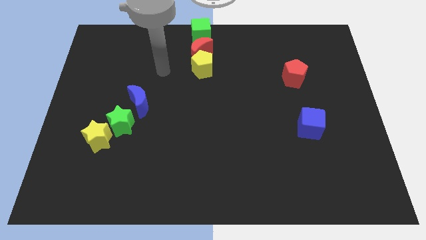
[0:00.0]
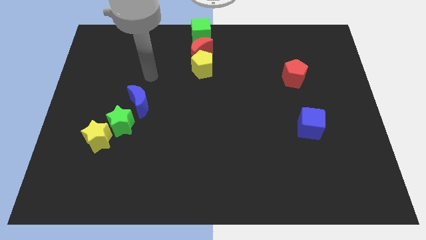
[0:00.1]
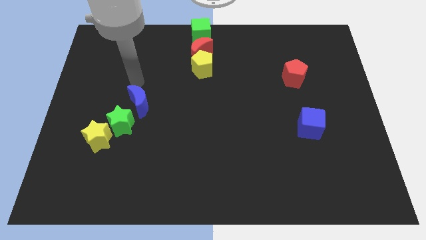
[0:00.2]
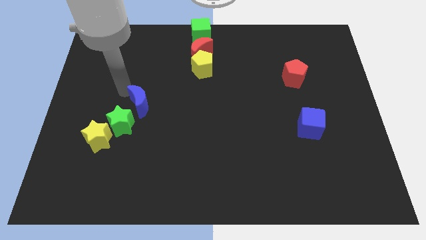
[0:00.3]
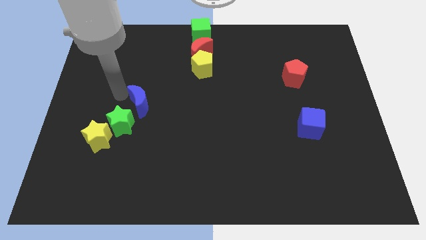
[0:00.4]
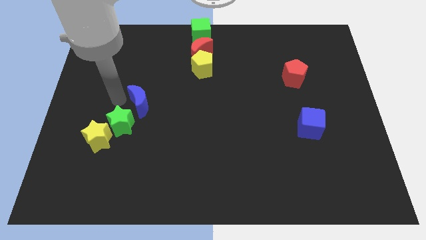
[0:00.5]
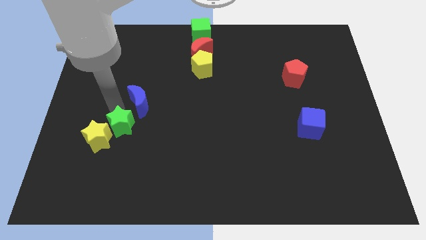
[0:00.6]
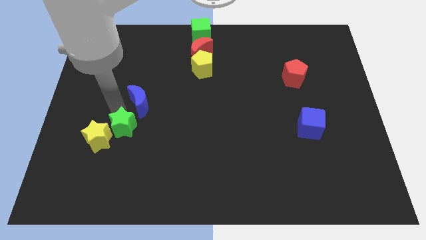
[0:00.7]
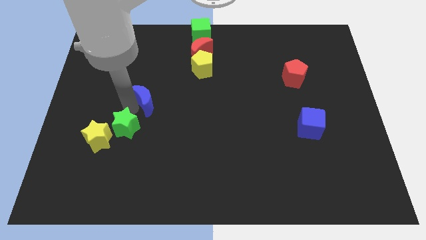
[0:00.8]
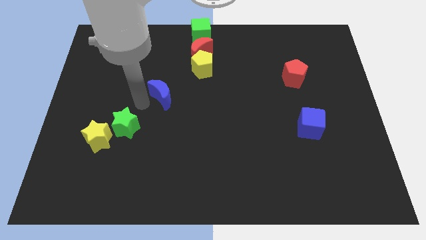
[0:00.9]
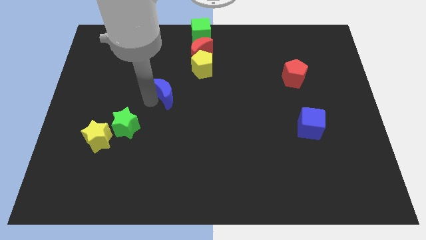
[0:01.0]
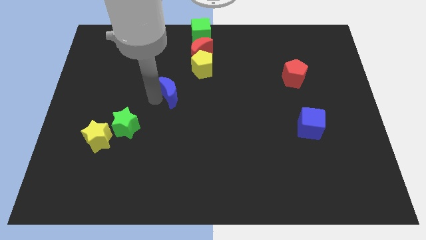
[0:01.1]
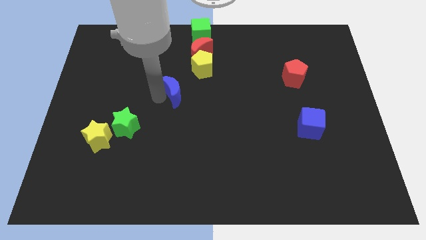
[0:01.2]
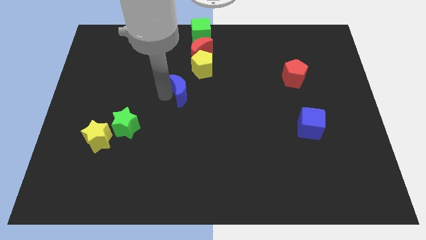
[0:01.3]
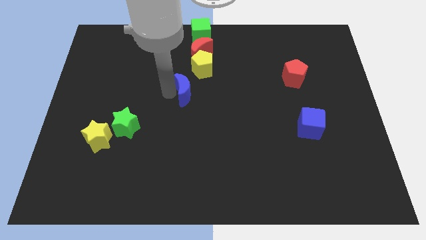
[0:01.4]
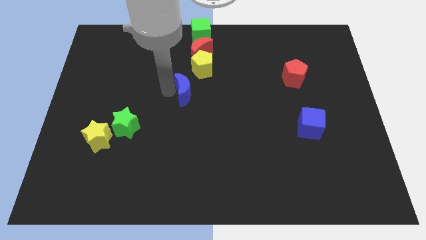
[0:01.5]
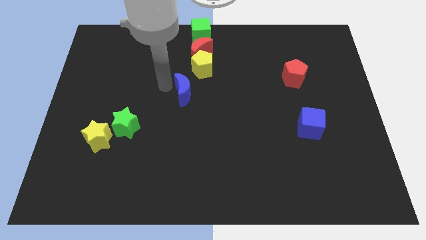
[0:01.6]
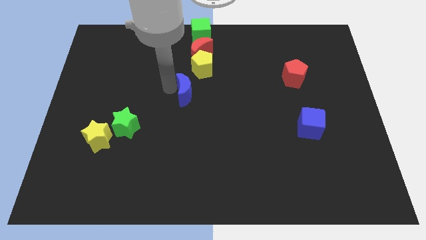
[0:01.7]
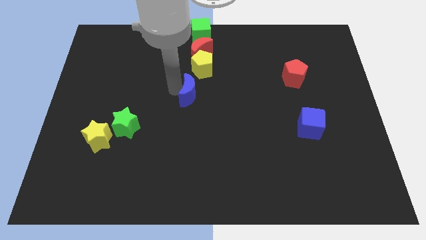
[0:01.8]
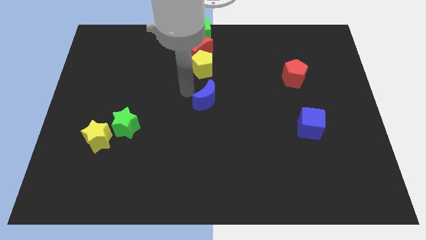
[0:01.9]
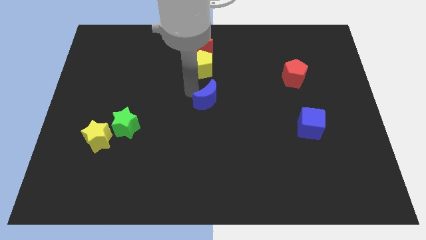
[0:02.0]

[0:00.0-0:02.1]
move the blue crescent to the bottom of the yellow pentagon

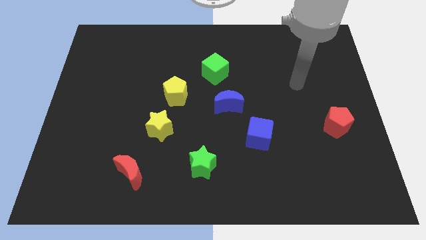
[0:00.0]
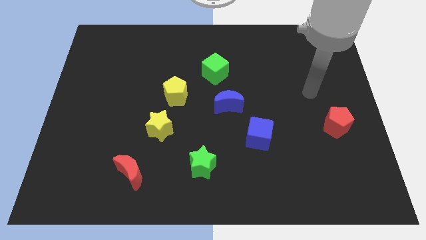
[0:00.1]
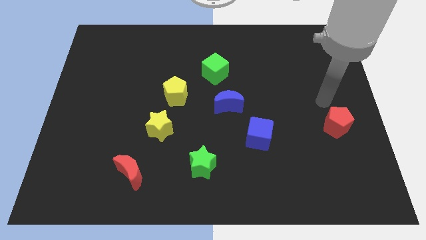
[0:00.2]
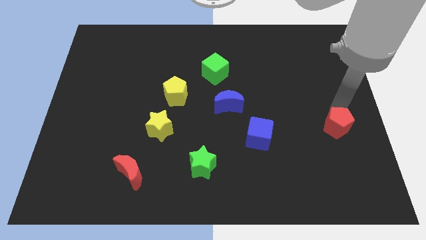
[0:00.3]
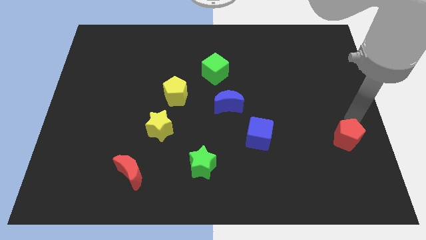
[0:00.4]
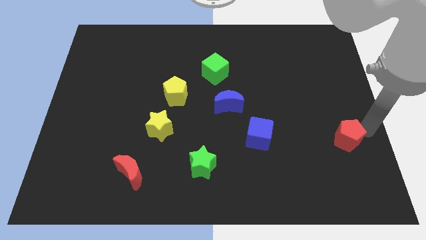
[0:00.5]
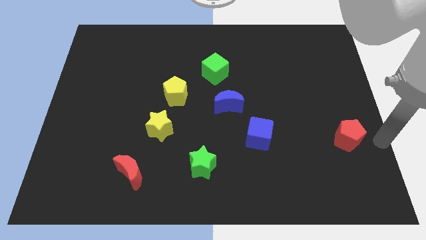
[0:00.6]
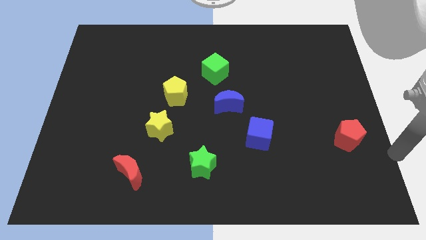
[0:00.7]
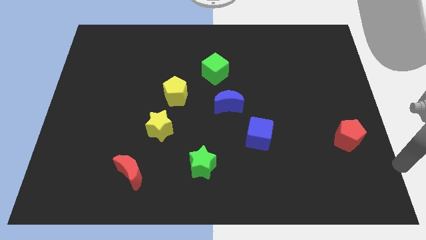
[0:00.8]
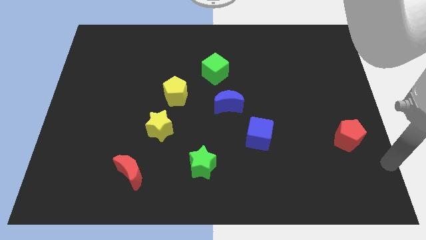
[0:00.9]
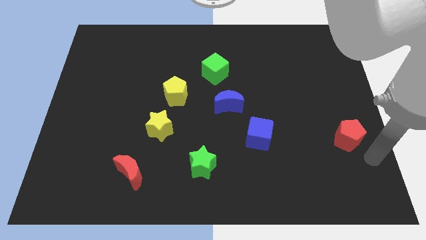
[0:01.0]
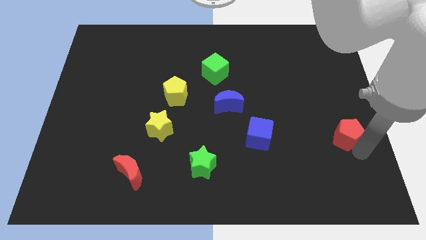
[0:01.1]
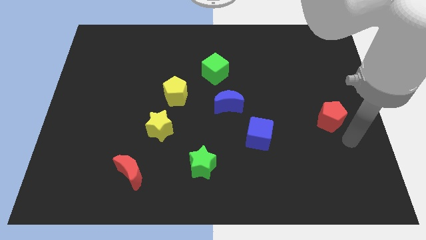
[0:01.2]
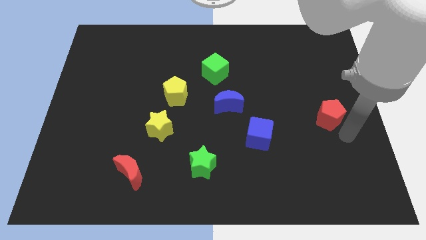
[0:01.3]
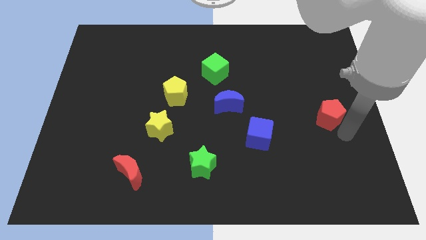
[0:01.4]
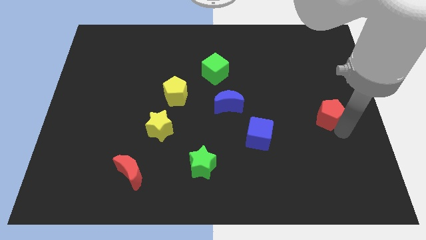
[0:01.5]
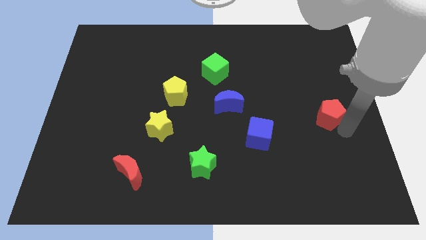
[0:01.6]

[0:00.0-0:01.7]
put the red pentagon parallel to blue cube

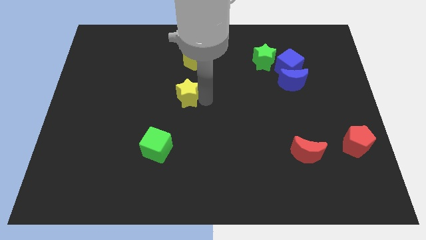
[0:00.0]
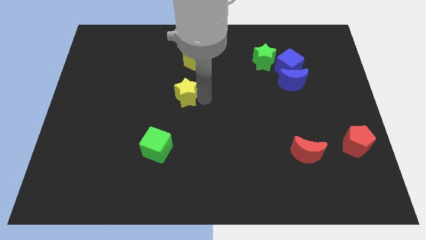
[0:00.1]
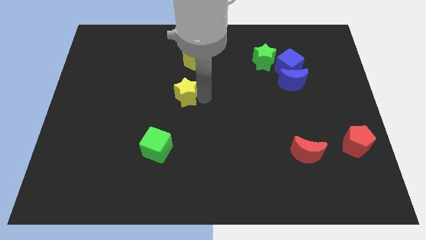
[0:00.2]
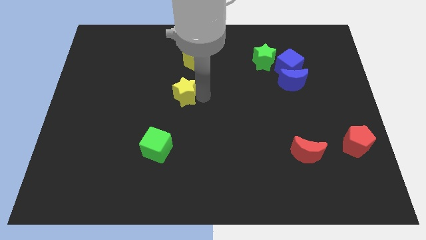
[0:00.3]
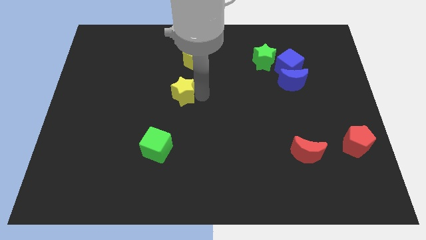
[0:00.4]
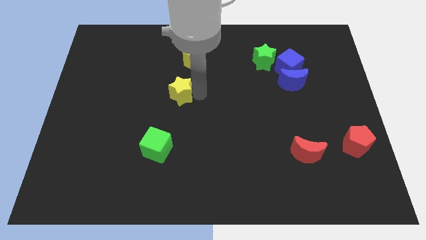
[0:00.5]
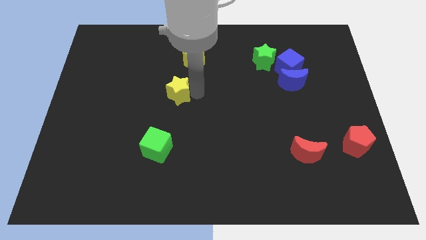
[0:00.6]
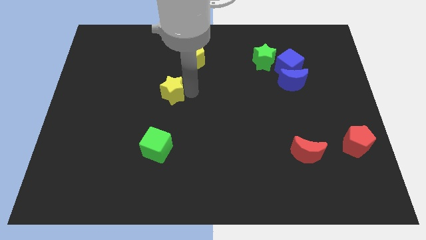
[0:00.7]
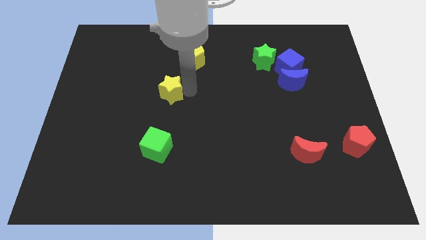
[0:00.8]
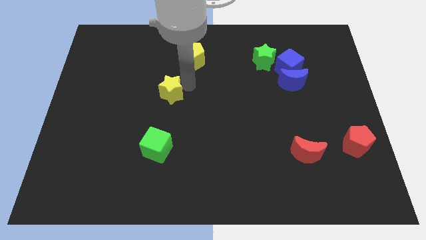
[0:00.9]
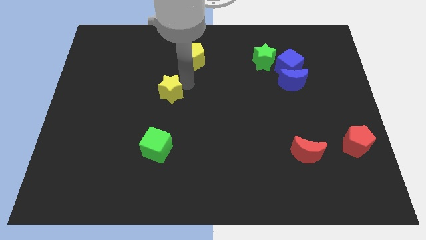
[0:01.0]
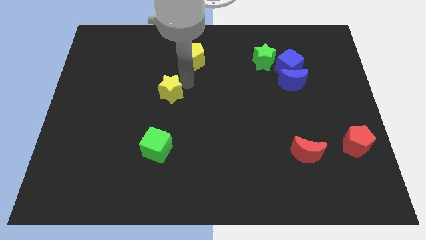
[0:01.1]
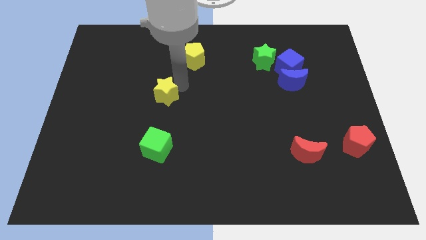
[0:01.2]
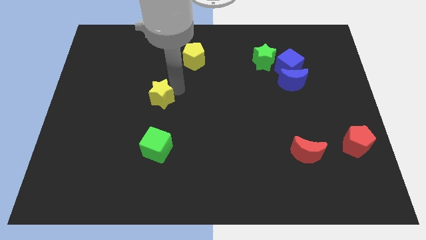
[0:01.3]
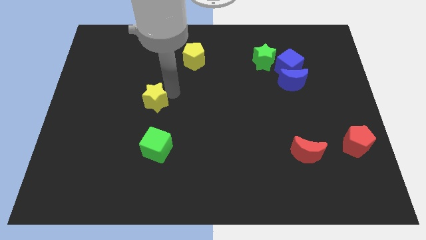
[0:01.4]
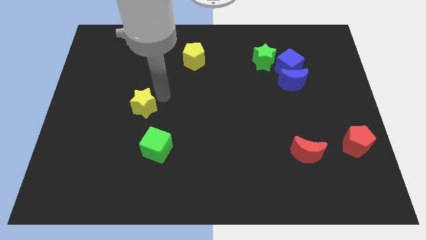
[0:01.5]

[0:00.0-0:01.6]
move the yellow star to the top of the green cube

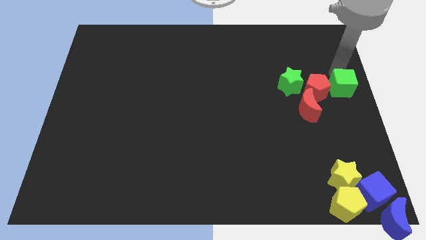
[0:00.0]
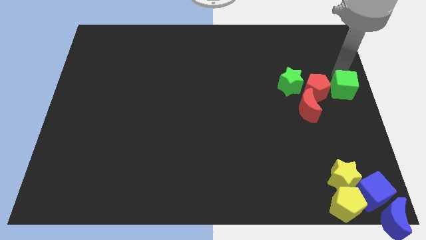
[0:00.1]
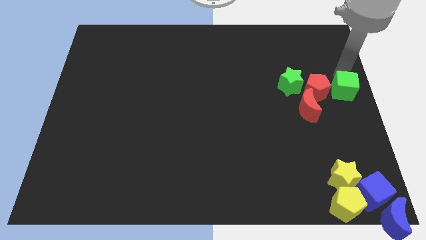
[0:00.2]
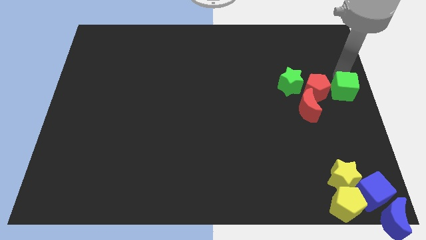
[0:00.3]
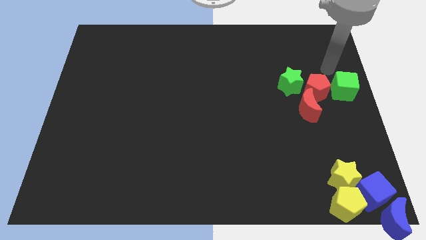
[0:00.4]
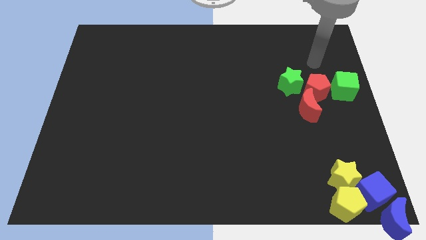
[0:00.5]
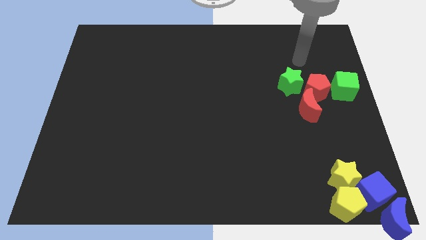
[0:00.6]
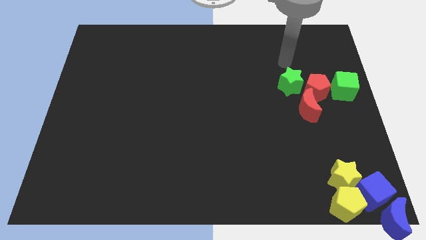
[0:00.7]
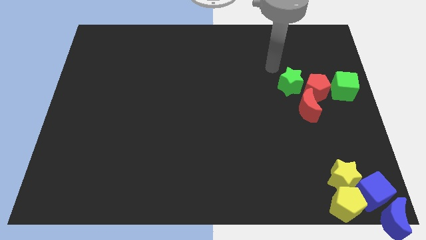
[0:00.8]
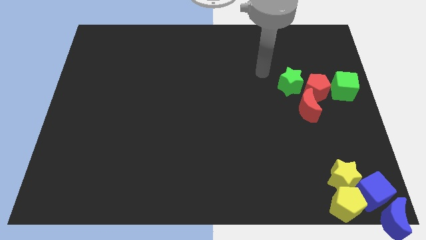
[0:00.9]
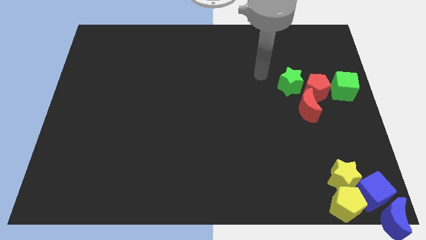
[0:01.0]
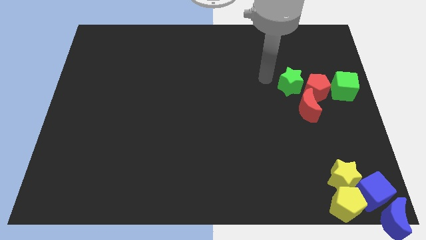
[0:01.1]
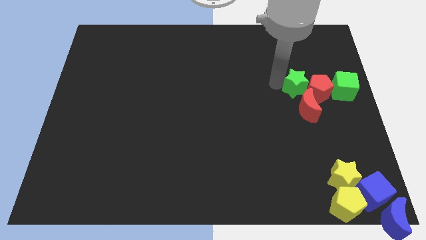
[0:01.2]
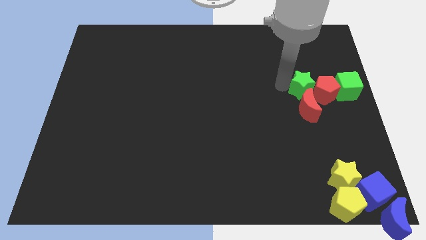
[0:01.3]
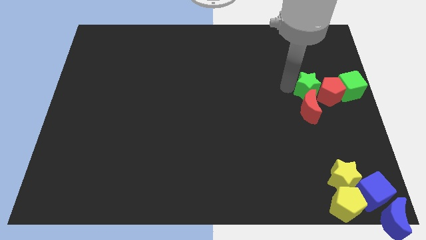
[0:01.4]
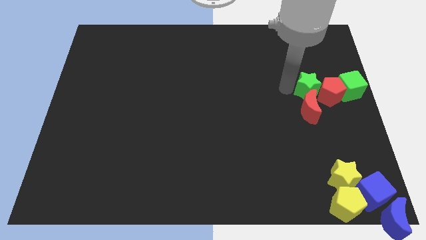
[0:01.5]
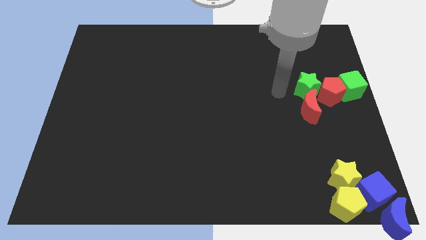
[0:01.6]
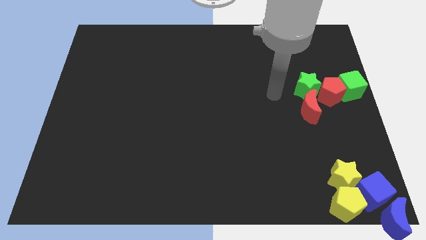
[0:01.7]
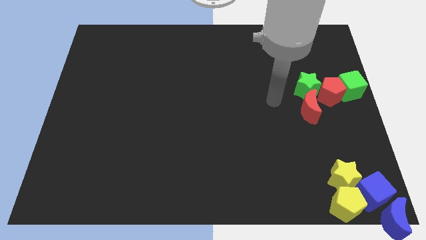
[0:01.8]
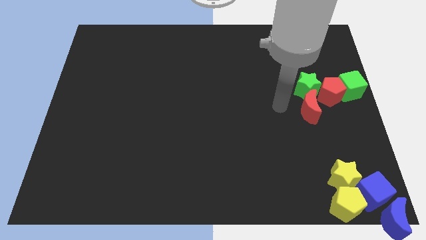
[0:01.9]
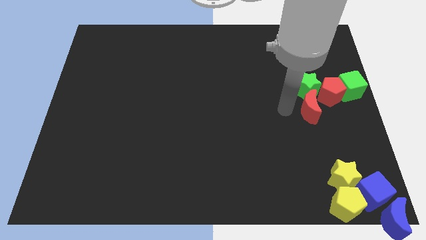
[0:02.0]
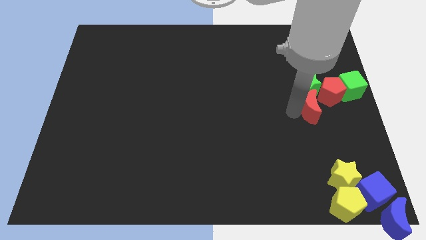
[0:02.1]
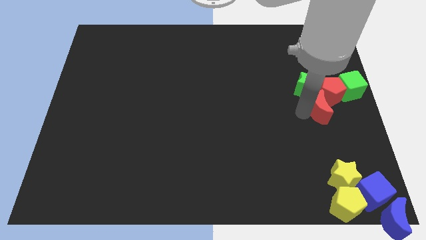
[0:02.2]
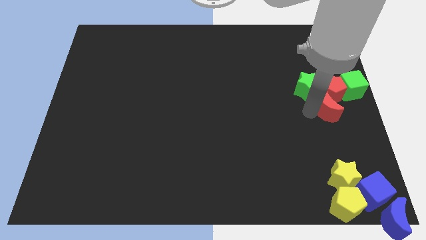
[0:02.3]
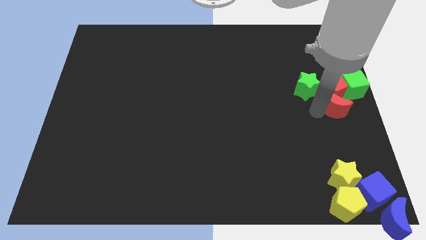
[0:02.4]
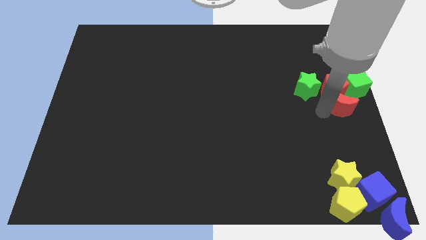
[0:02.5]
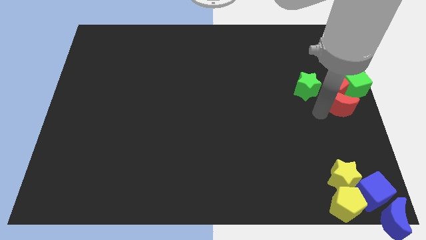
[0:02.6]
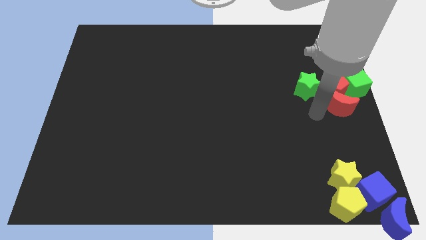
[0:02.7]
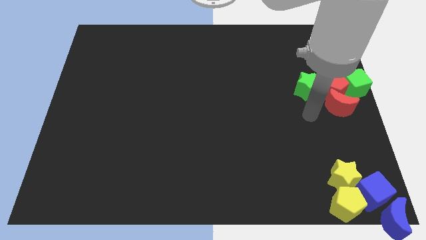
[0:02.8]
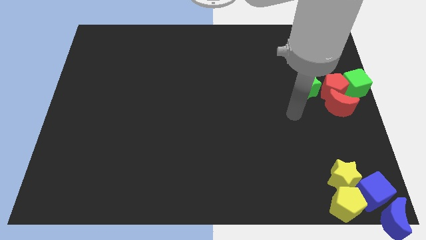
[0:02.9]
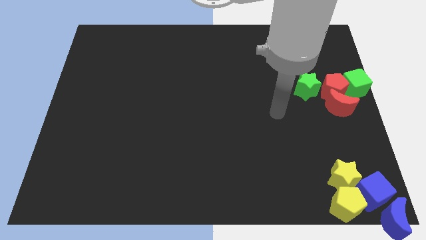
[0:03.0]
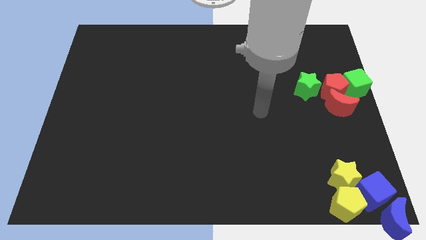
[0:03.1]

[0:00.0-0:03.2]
move the green and red group of blocks to the center right of the board

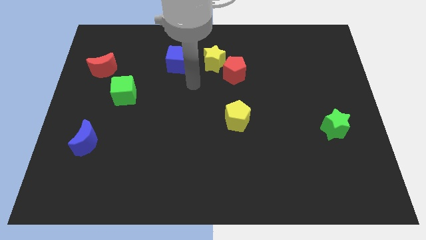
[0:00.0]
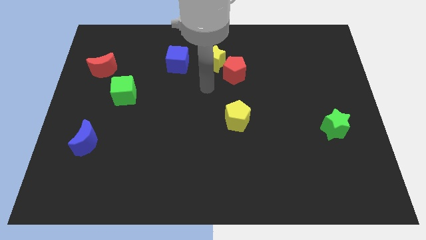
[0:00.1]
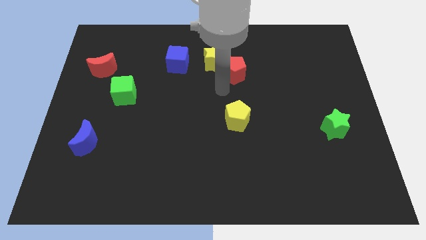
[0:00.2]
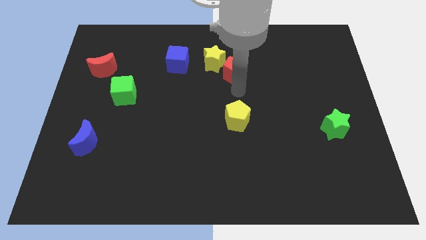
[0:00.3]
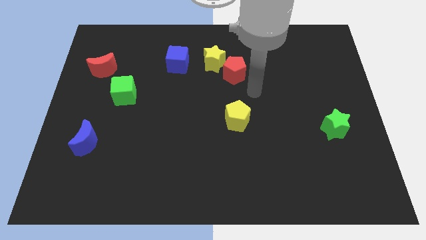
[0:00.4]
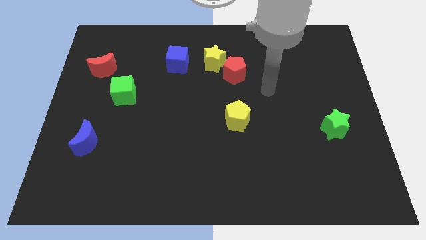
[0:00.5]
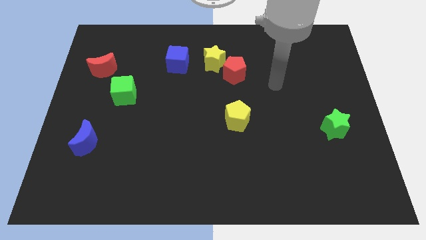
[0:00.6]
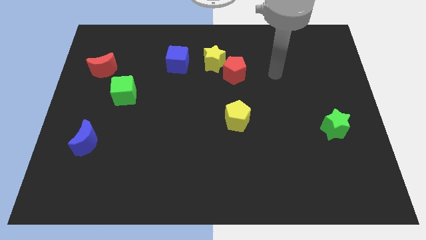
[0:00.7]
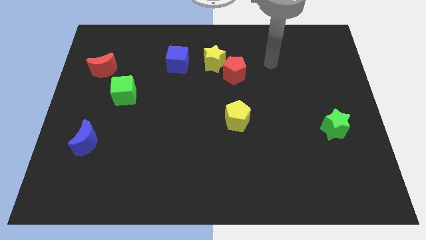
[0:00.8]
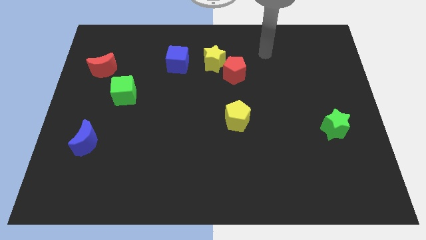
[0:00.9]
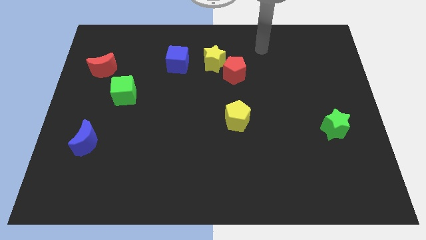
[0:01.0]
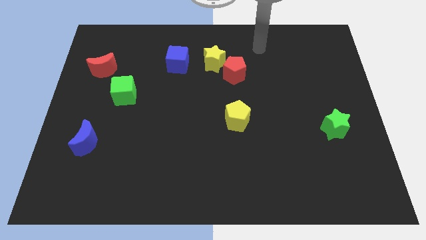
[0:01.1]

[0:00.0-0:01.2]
move your arm to the top center of the board
